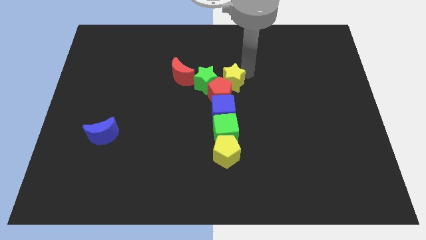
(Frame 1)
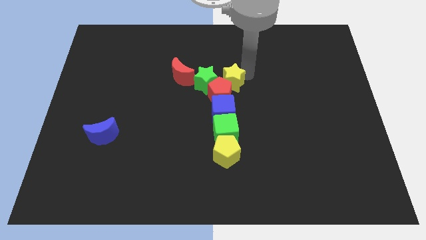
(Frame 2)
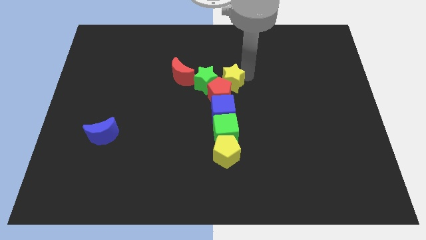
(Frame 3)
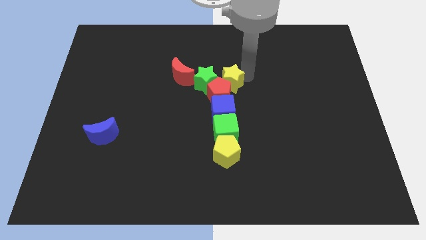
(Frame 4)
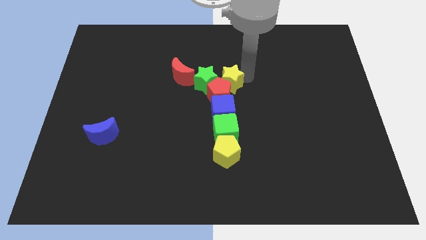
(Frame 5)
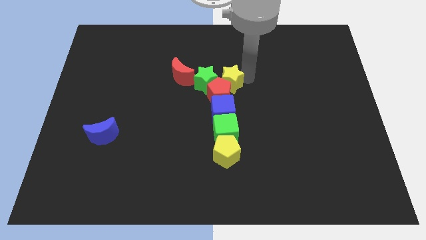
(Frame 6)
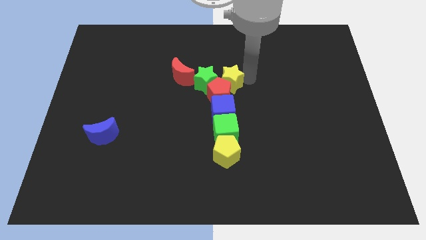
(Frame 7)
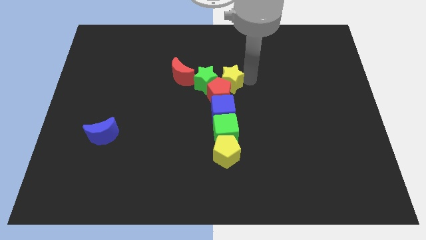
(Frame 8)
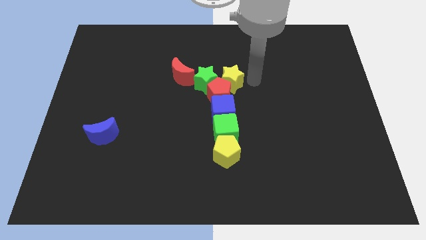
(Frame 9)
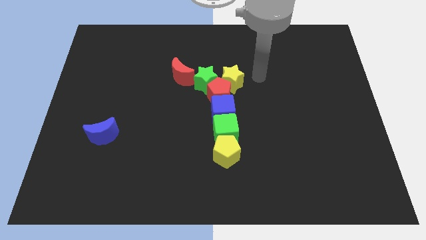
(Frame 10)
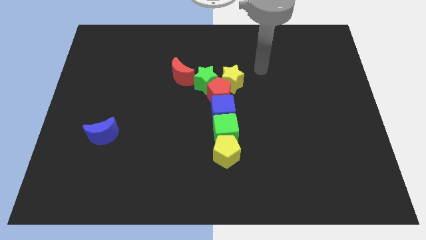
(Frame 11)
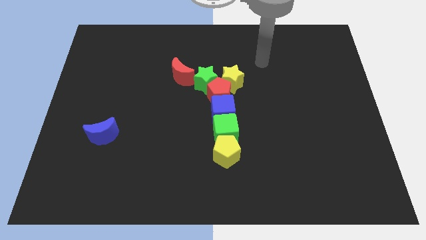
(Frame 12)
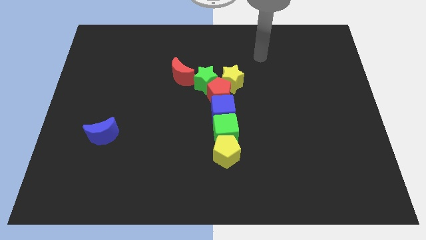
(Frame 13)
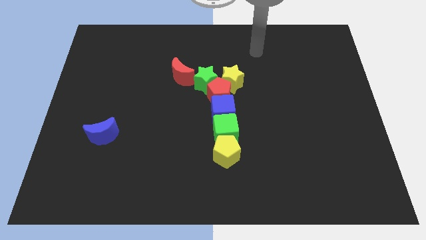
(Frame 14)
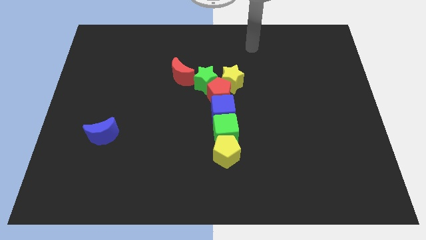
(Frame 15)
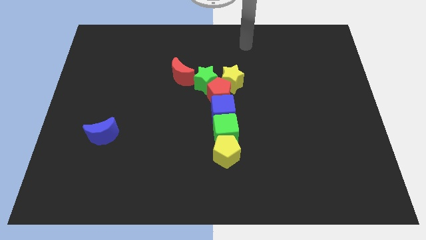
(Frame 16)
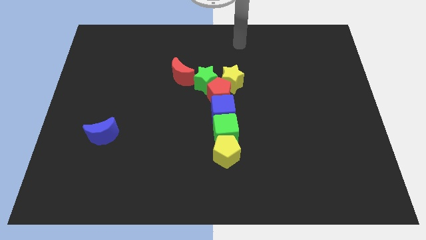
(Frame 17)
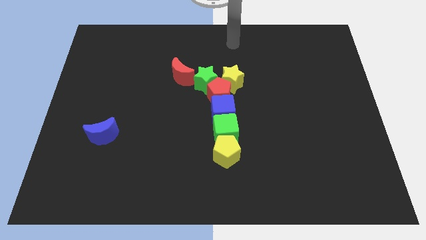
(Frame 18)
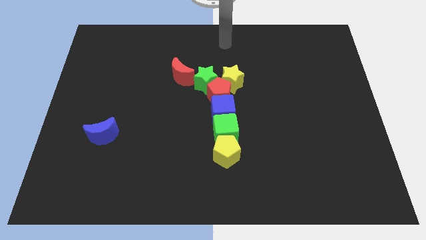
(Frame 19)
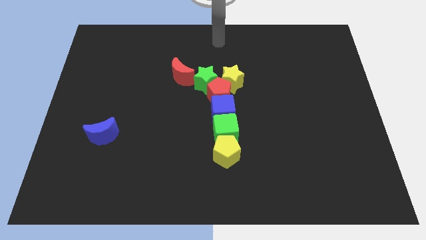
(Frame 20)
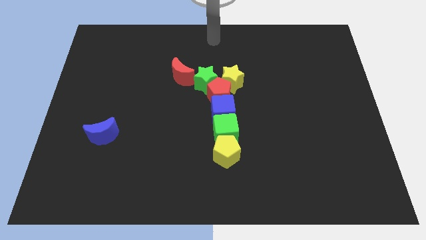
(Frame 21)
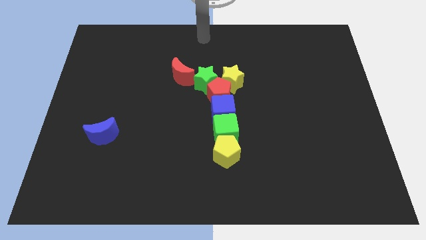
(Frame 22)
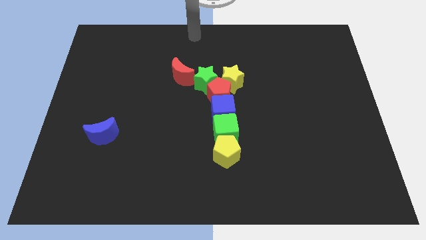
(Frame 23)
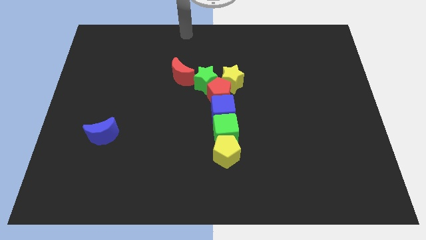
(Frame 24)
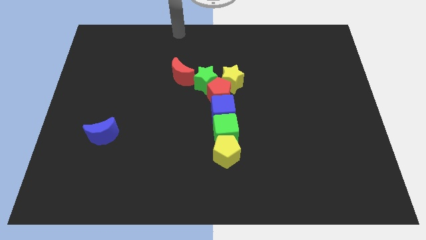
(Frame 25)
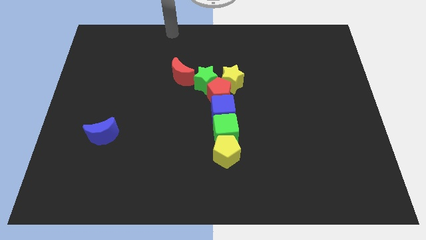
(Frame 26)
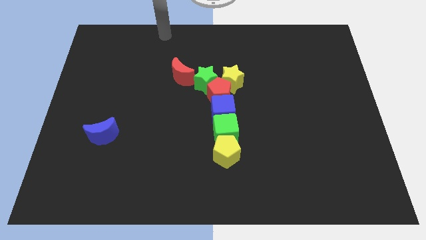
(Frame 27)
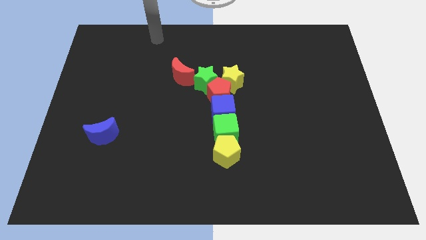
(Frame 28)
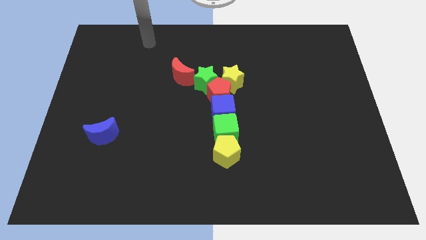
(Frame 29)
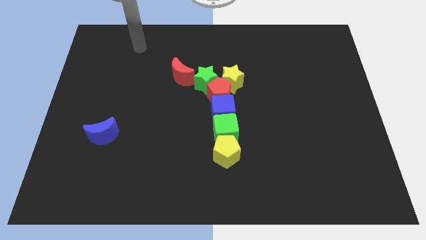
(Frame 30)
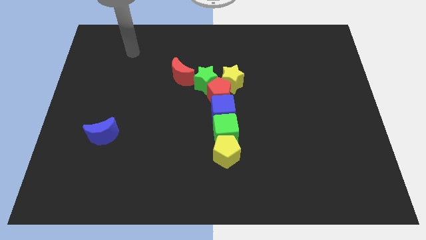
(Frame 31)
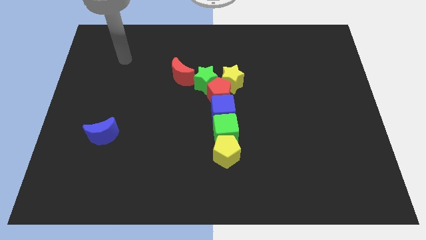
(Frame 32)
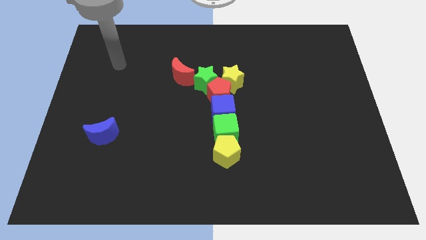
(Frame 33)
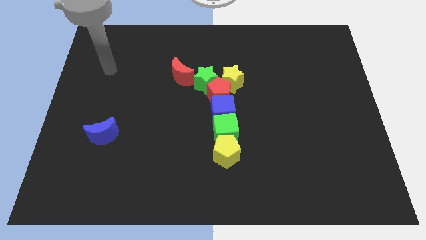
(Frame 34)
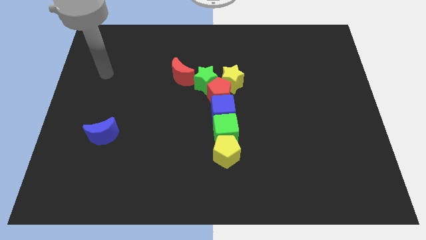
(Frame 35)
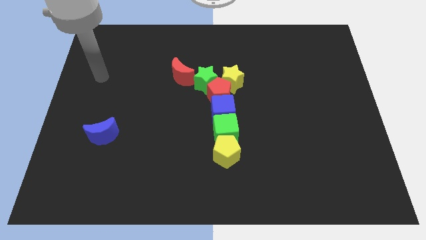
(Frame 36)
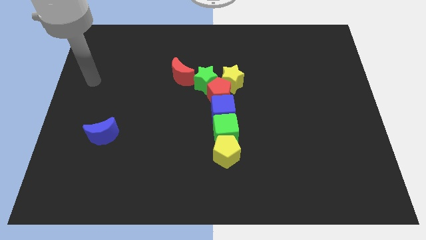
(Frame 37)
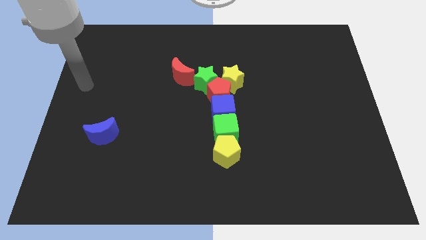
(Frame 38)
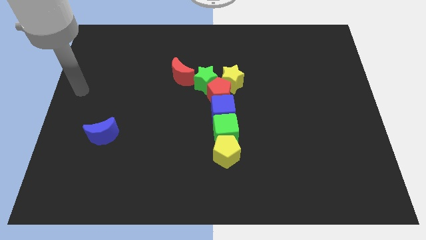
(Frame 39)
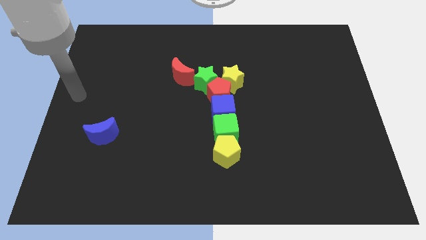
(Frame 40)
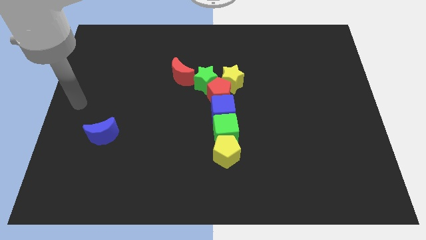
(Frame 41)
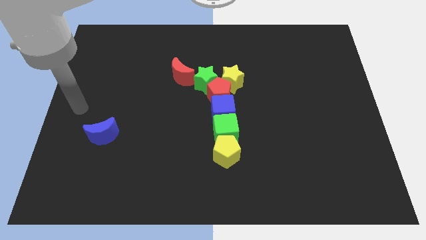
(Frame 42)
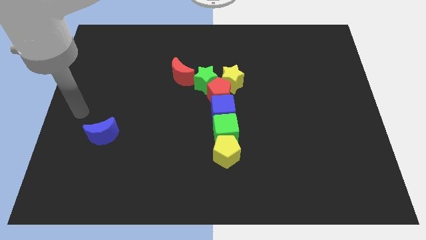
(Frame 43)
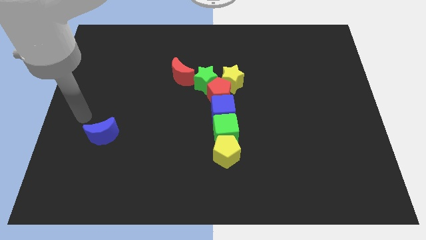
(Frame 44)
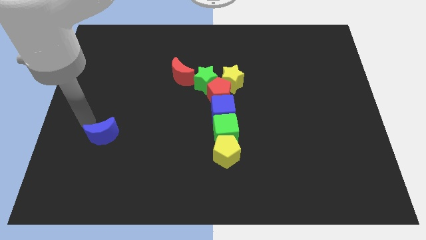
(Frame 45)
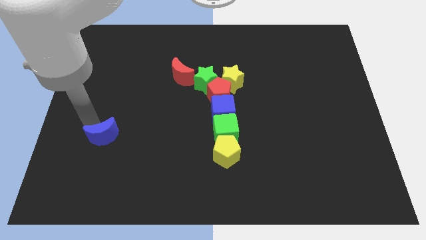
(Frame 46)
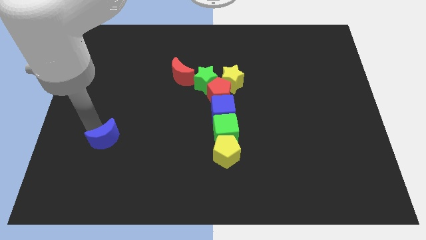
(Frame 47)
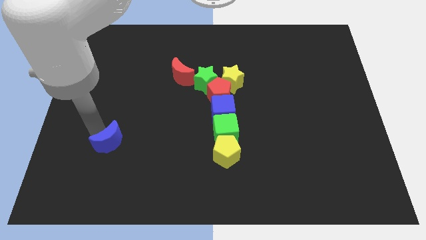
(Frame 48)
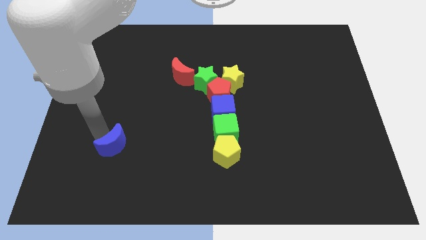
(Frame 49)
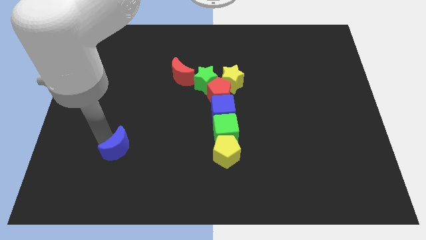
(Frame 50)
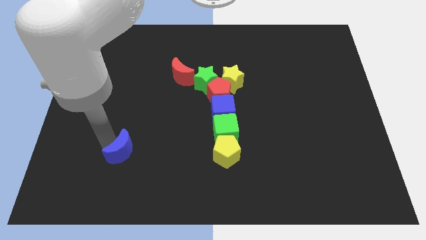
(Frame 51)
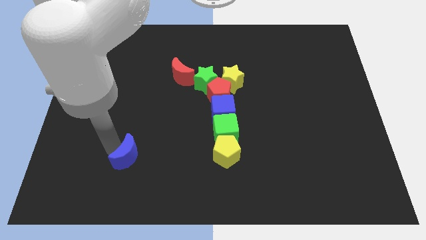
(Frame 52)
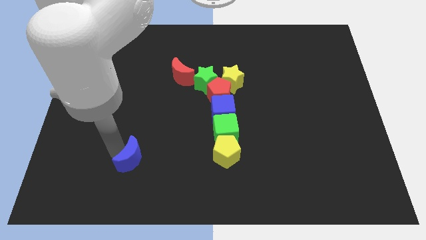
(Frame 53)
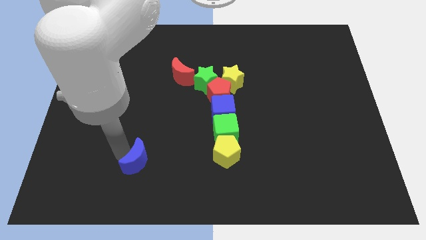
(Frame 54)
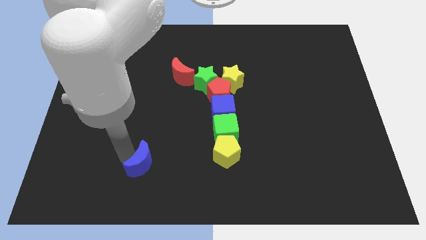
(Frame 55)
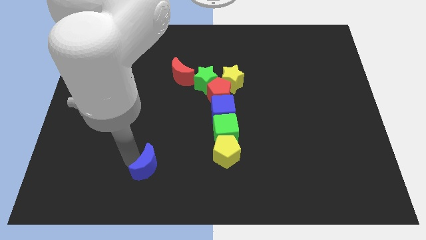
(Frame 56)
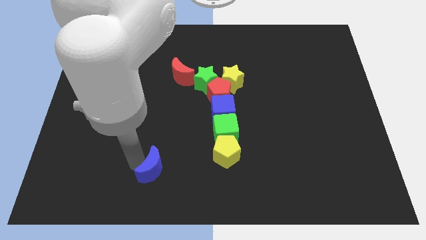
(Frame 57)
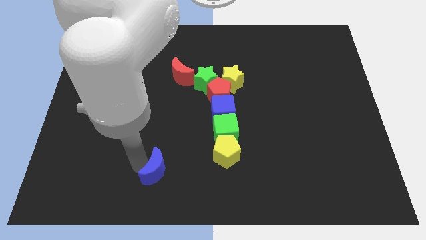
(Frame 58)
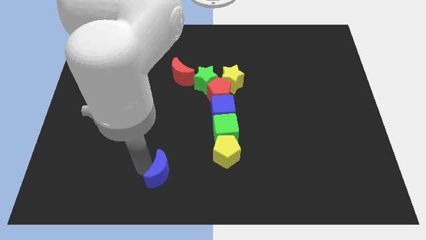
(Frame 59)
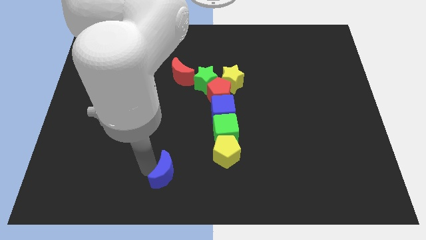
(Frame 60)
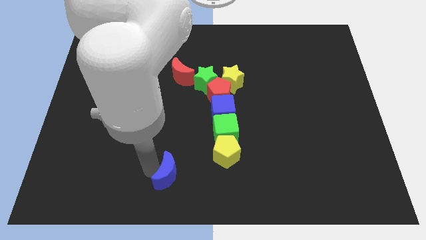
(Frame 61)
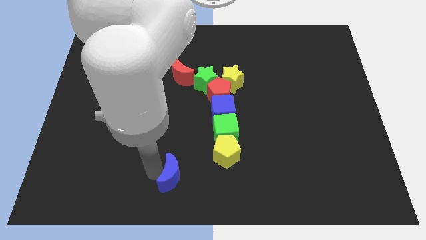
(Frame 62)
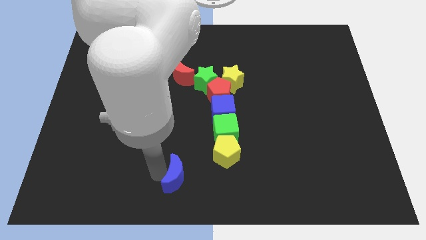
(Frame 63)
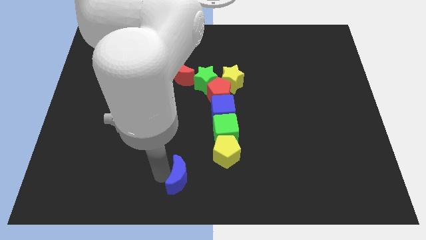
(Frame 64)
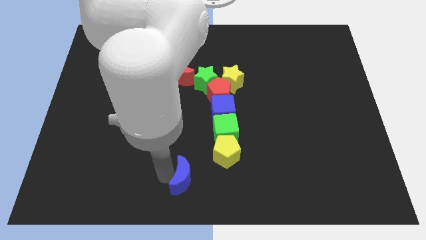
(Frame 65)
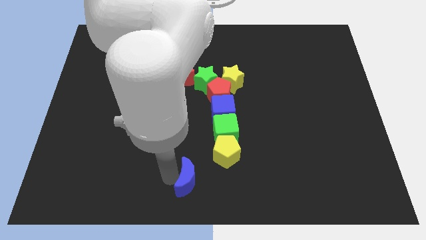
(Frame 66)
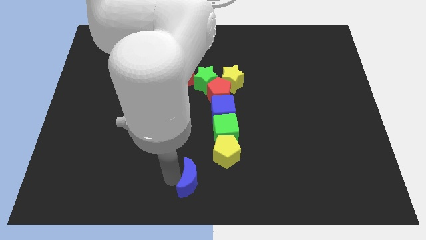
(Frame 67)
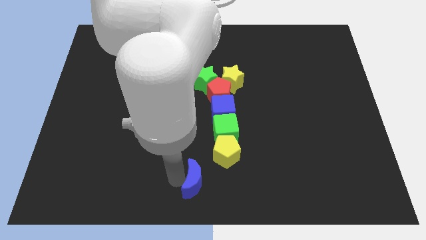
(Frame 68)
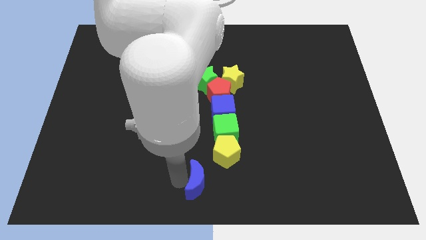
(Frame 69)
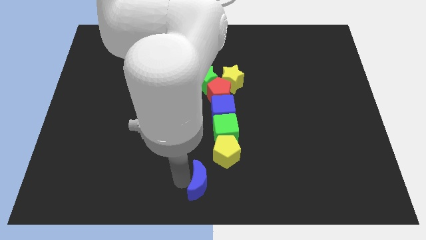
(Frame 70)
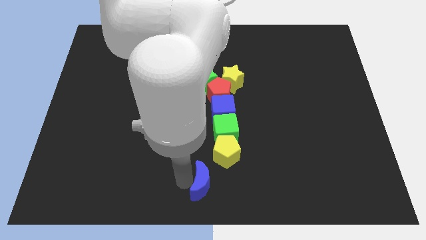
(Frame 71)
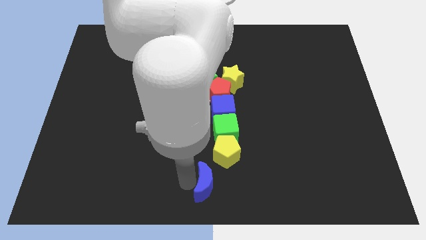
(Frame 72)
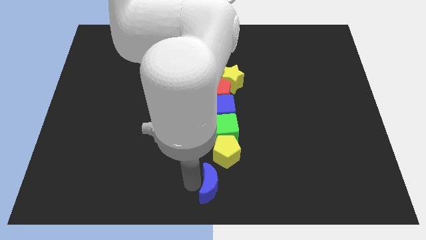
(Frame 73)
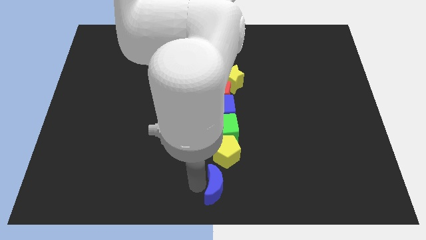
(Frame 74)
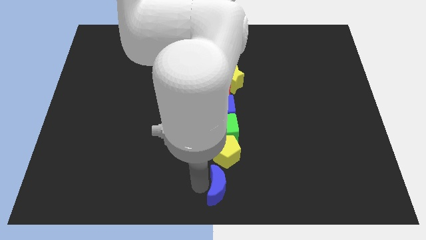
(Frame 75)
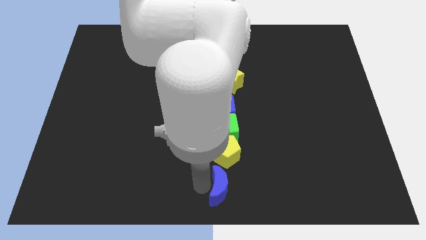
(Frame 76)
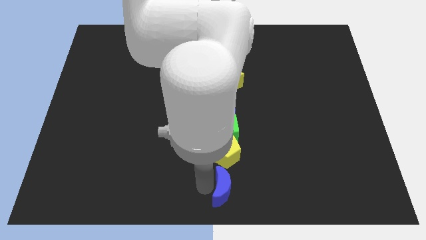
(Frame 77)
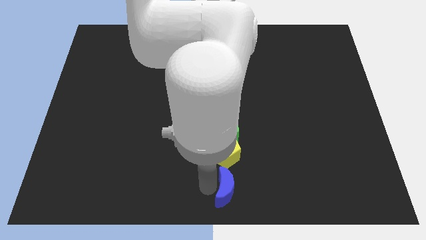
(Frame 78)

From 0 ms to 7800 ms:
place the blue semicircle below the yellow pentagon

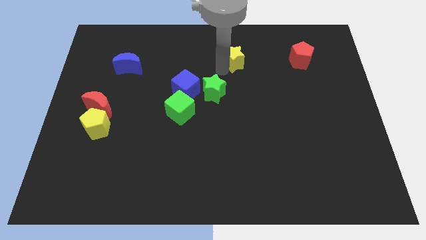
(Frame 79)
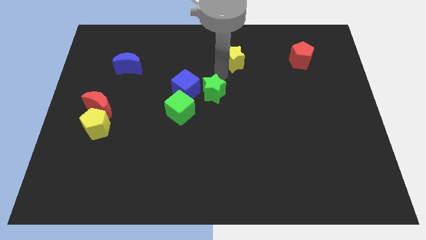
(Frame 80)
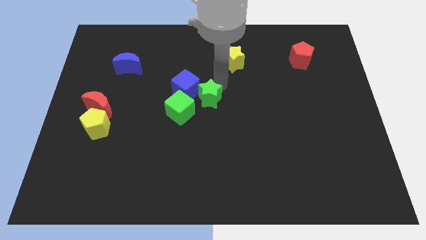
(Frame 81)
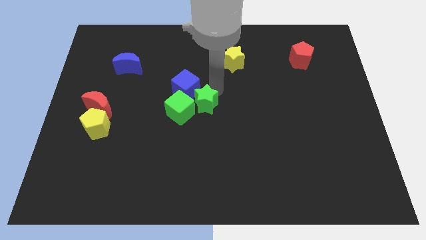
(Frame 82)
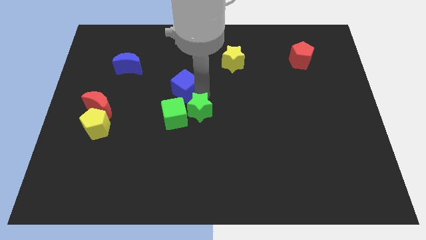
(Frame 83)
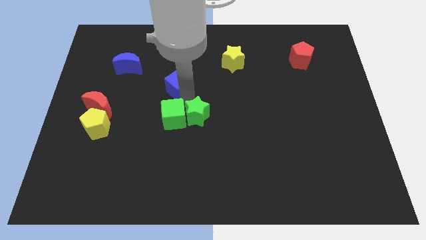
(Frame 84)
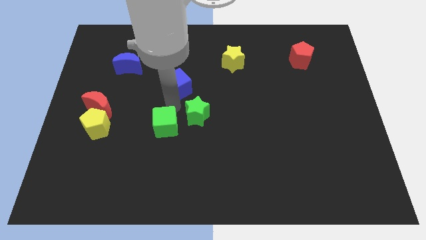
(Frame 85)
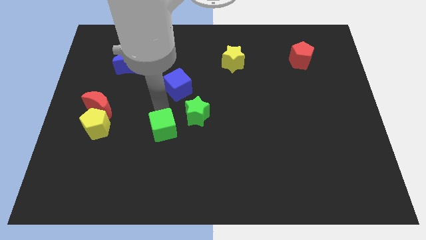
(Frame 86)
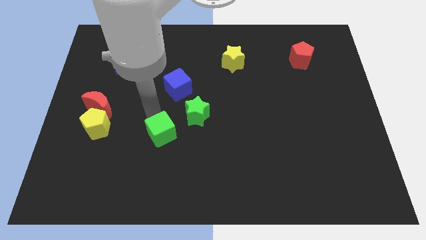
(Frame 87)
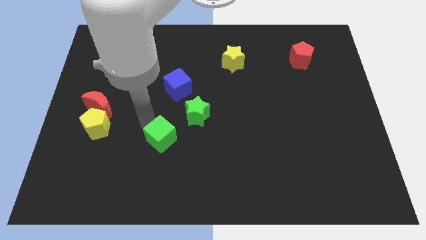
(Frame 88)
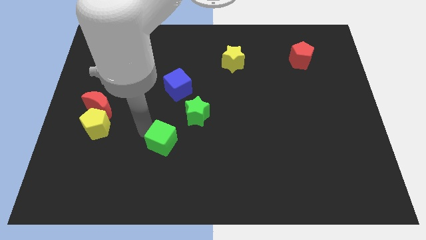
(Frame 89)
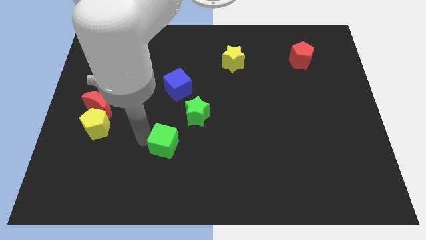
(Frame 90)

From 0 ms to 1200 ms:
move the green blocks slightly to the down
